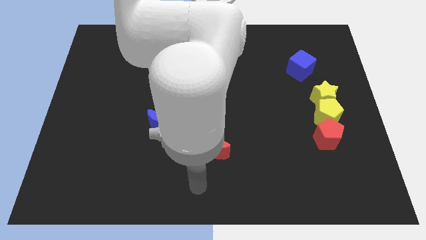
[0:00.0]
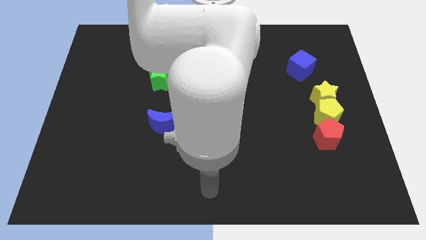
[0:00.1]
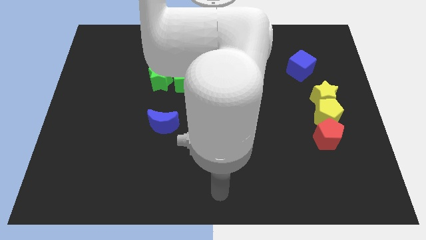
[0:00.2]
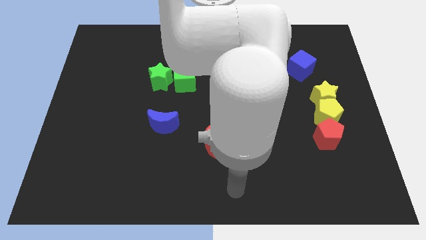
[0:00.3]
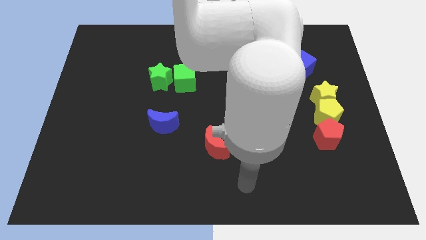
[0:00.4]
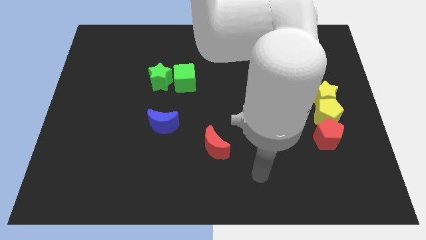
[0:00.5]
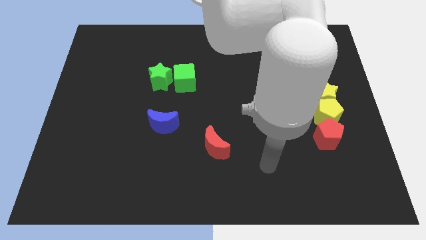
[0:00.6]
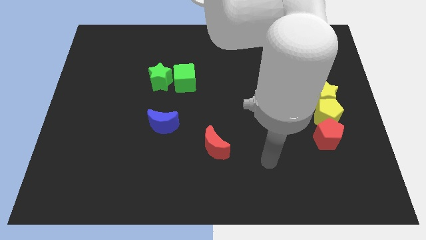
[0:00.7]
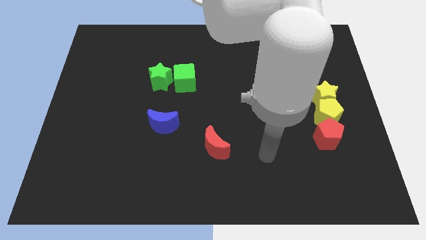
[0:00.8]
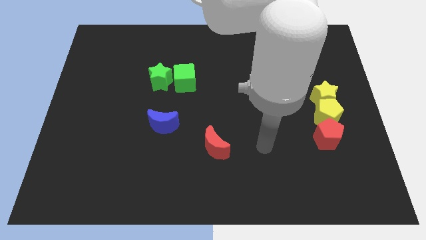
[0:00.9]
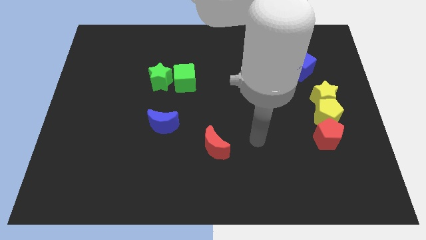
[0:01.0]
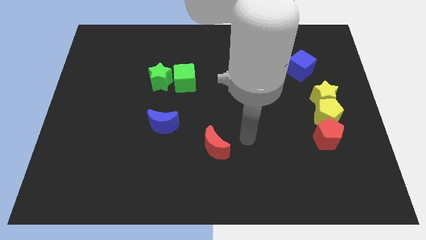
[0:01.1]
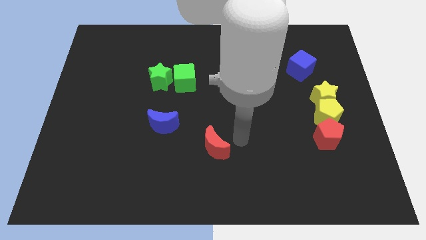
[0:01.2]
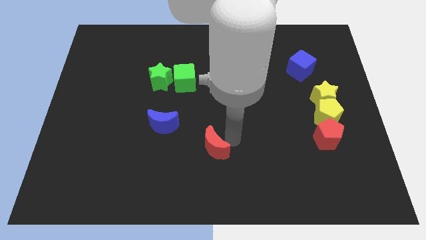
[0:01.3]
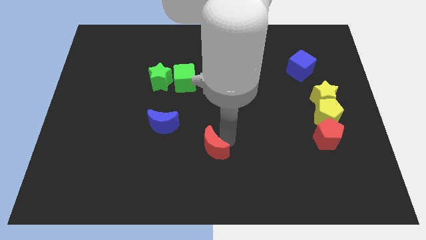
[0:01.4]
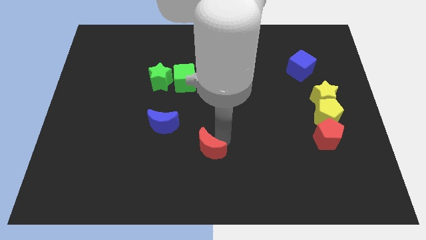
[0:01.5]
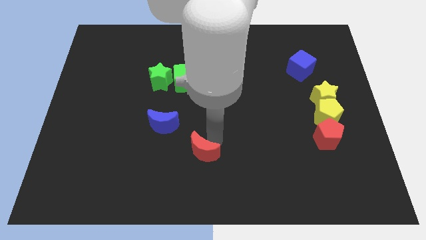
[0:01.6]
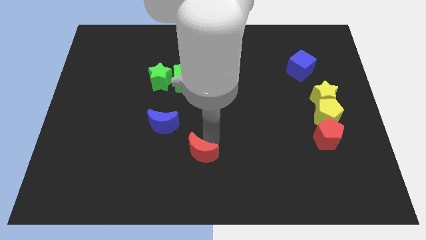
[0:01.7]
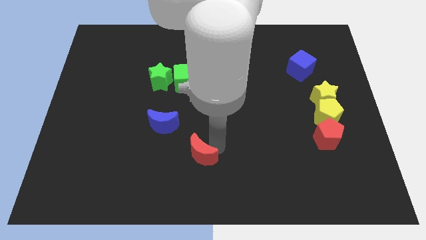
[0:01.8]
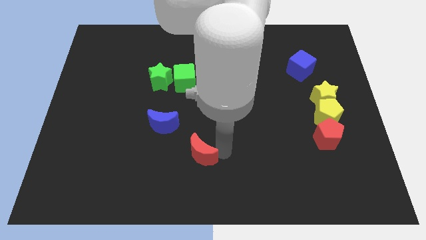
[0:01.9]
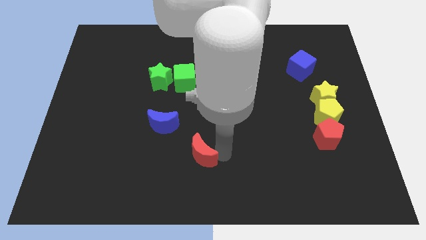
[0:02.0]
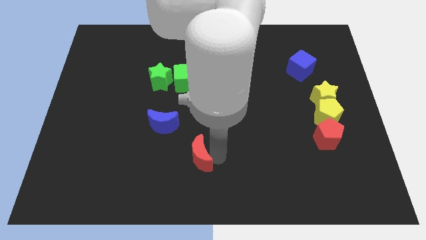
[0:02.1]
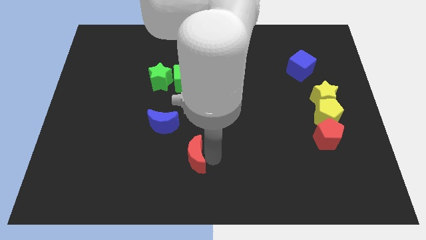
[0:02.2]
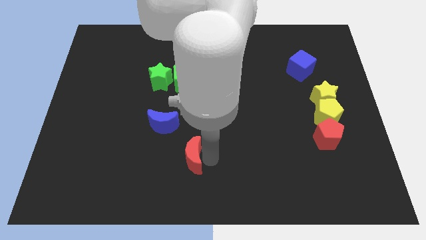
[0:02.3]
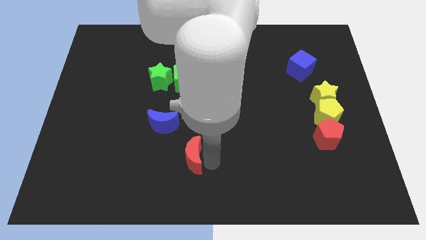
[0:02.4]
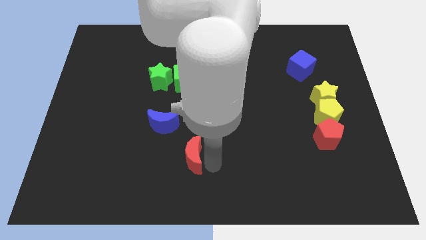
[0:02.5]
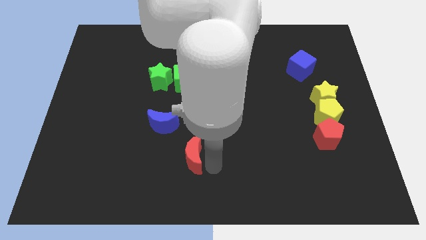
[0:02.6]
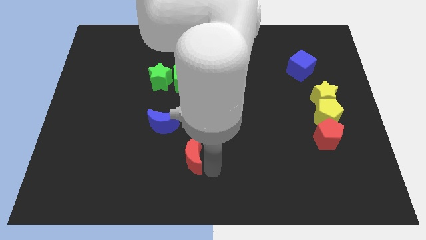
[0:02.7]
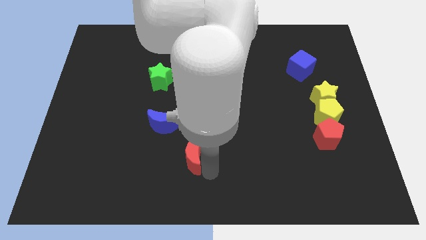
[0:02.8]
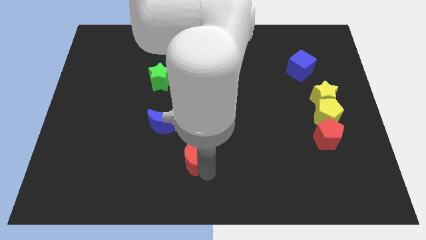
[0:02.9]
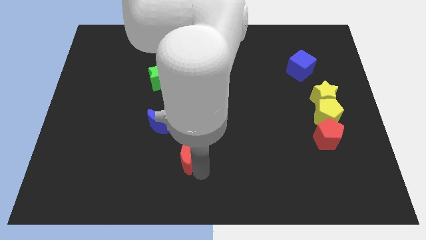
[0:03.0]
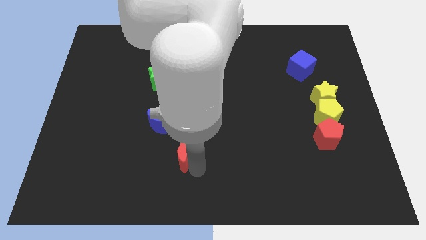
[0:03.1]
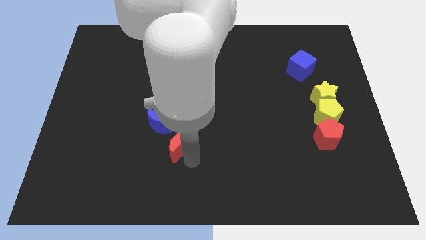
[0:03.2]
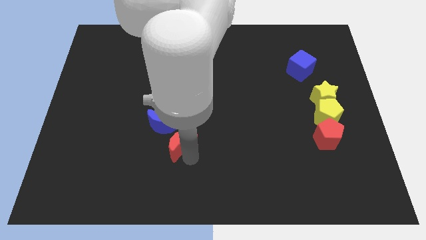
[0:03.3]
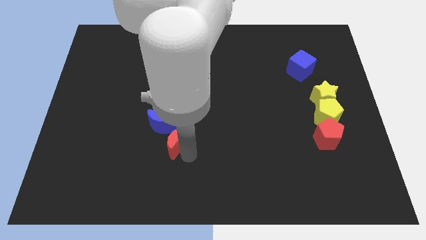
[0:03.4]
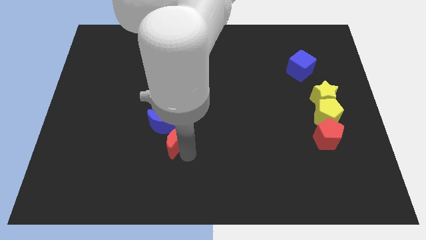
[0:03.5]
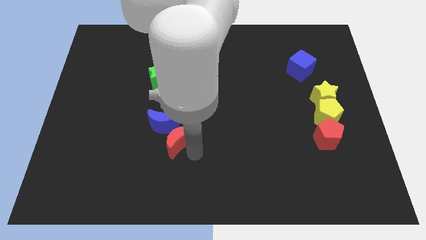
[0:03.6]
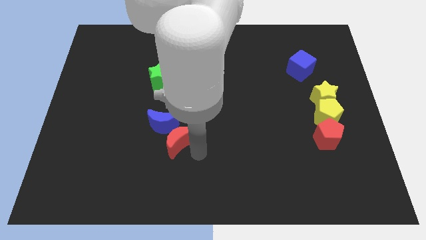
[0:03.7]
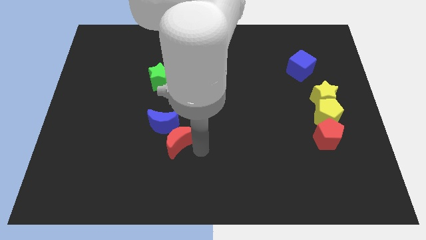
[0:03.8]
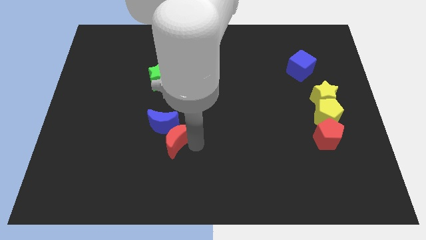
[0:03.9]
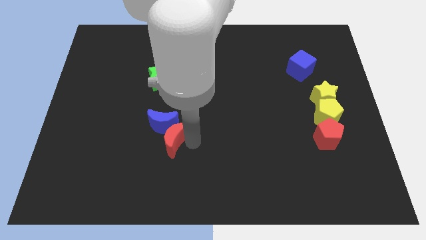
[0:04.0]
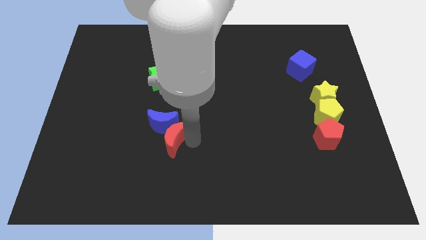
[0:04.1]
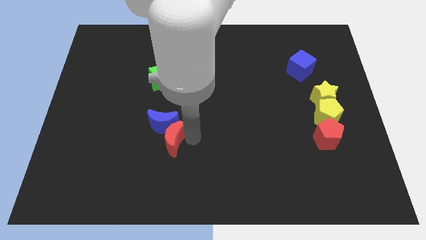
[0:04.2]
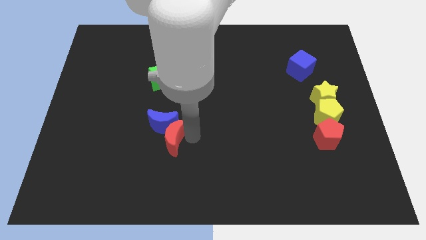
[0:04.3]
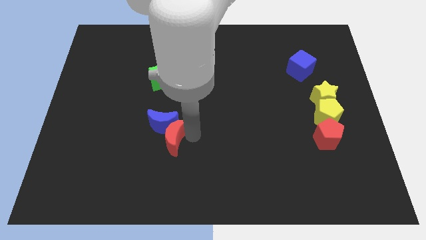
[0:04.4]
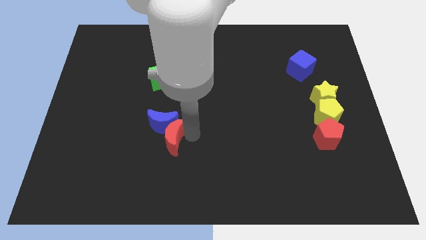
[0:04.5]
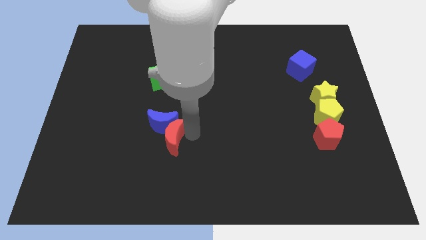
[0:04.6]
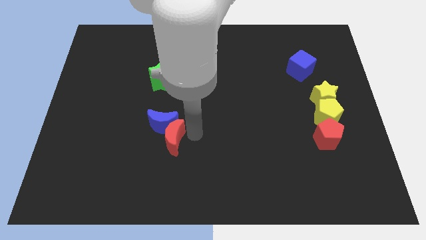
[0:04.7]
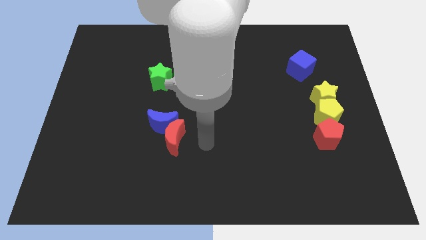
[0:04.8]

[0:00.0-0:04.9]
push the red moon into the blue moon

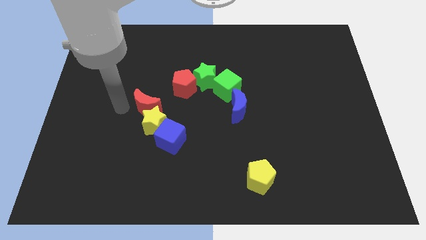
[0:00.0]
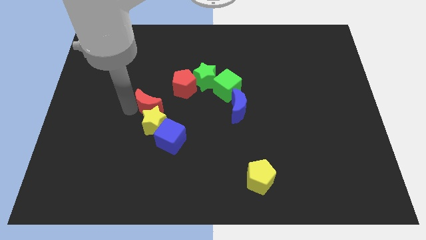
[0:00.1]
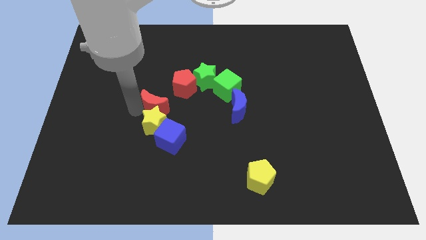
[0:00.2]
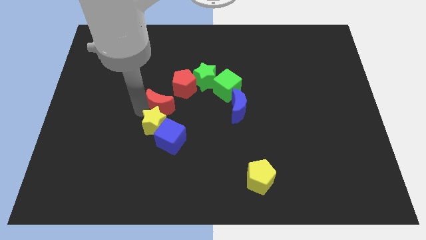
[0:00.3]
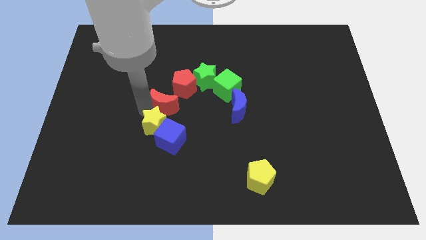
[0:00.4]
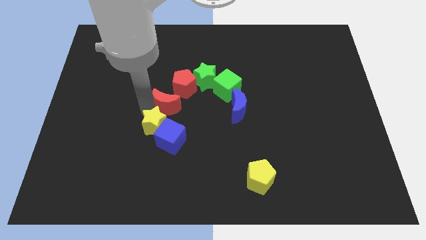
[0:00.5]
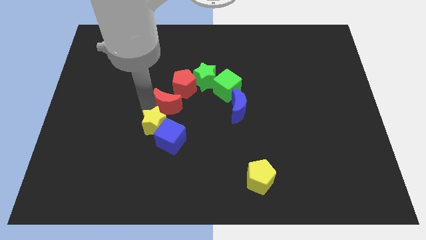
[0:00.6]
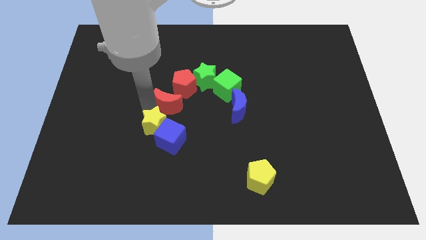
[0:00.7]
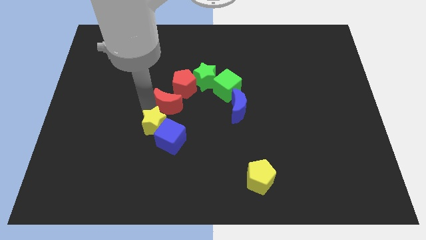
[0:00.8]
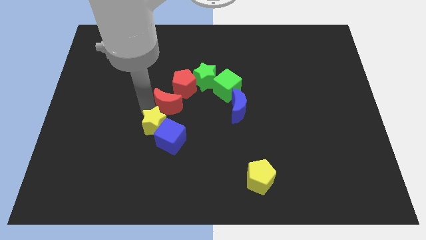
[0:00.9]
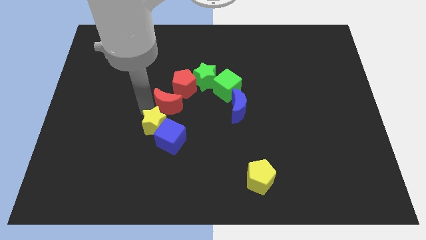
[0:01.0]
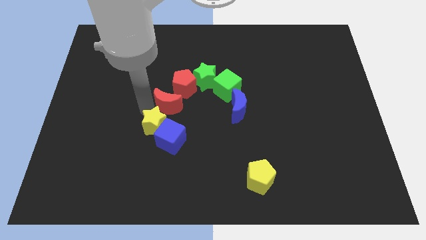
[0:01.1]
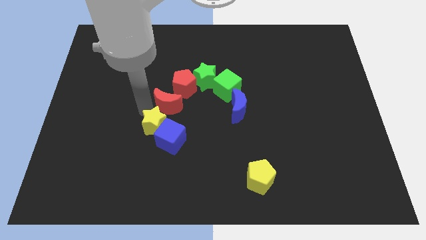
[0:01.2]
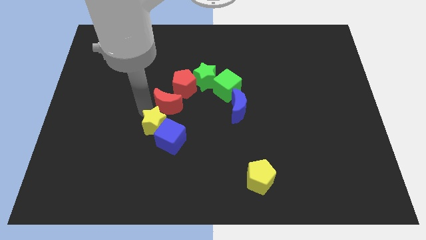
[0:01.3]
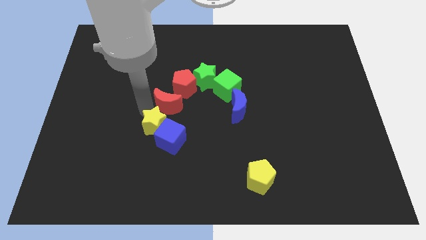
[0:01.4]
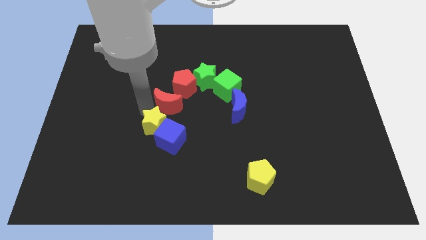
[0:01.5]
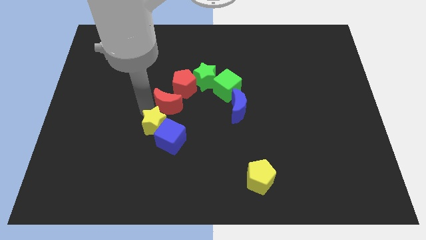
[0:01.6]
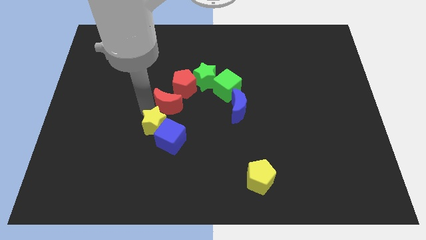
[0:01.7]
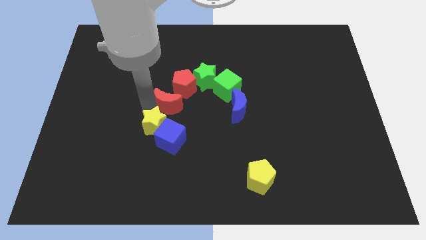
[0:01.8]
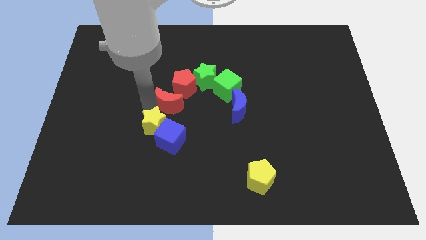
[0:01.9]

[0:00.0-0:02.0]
place the red crescent diagonally in between the red pentagon and yellow star

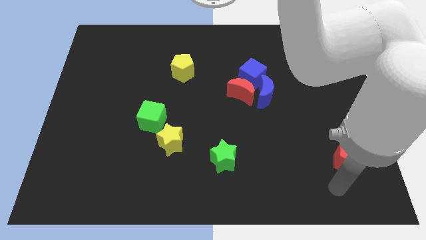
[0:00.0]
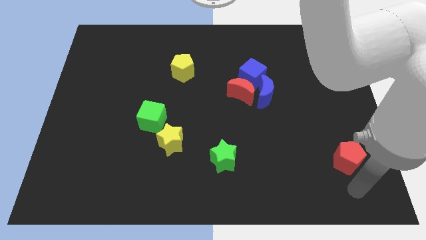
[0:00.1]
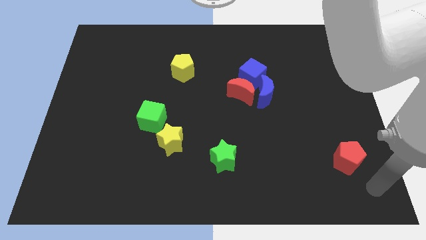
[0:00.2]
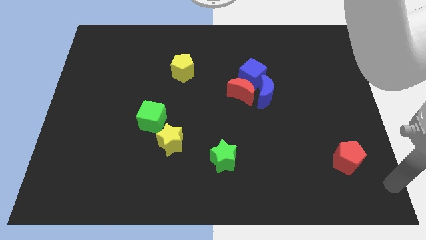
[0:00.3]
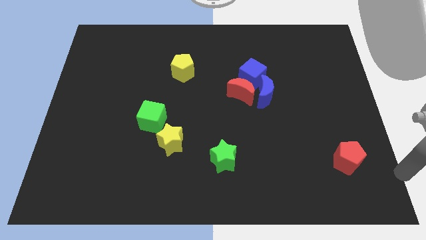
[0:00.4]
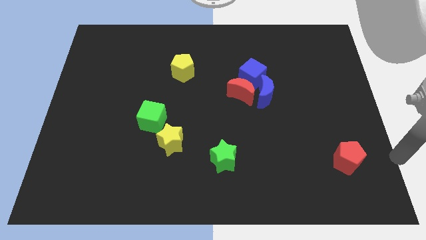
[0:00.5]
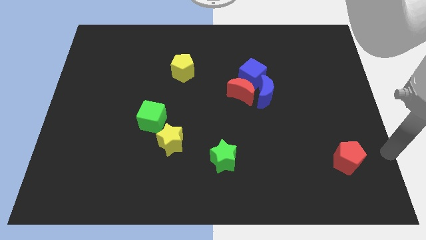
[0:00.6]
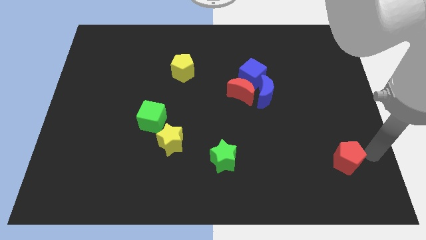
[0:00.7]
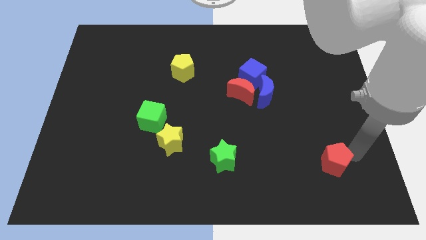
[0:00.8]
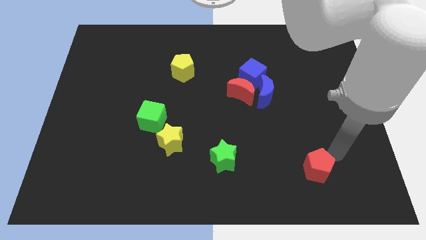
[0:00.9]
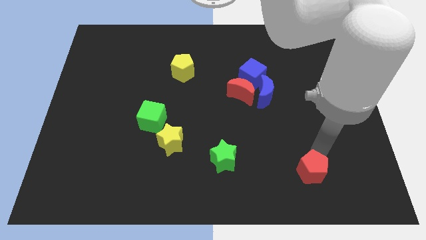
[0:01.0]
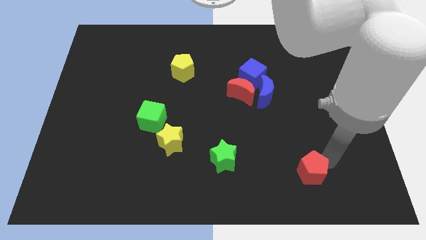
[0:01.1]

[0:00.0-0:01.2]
push the red pentagon to the left of the board

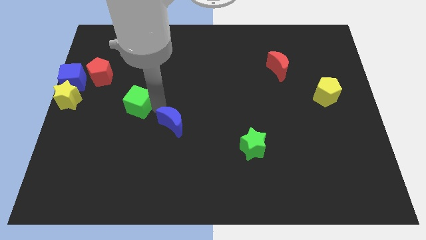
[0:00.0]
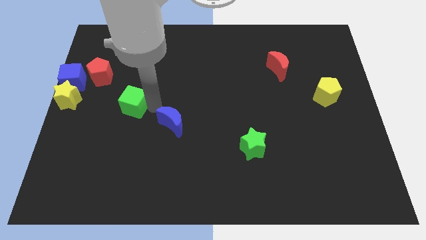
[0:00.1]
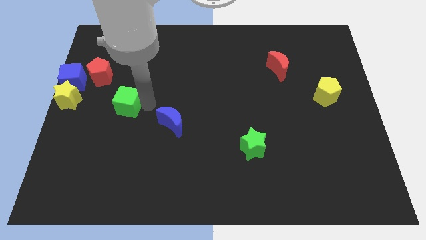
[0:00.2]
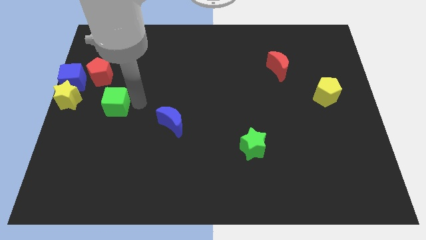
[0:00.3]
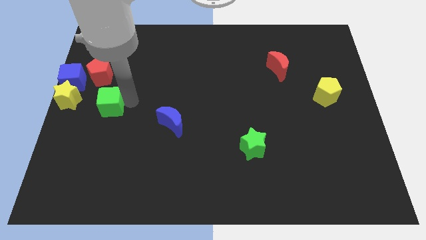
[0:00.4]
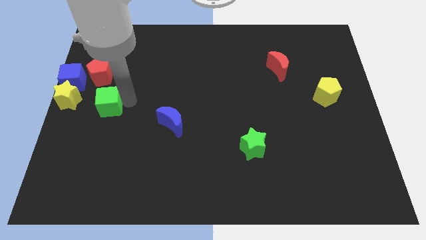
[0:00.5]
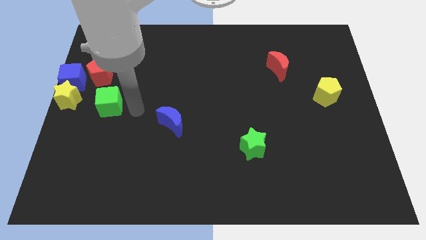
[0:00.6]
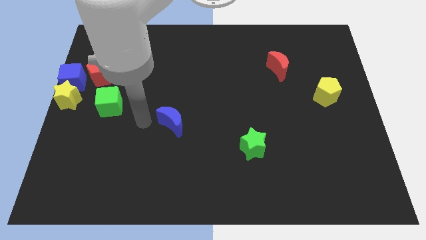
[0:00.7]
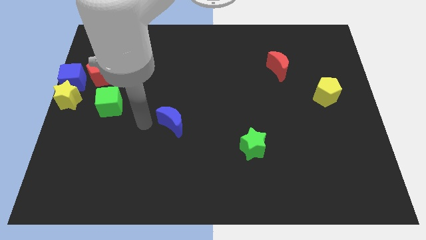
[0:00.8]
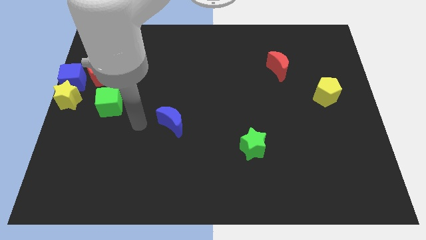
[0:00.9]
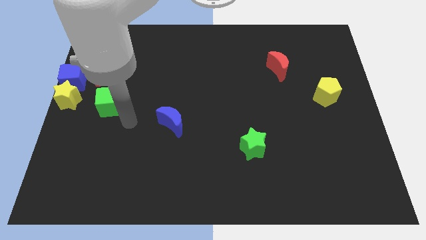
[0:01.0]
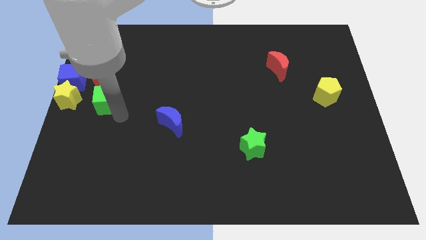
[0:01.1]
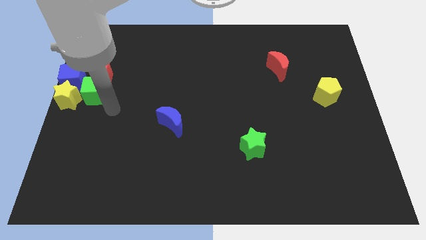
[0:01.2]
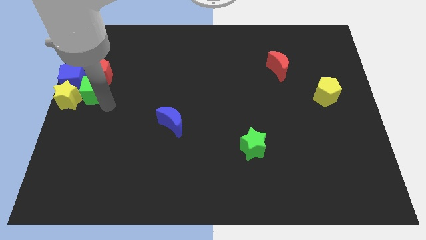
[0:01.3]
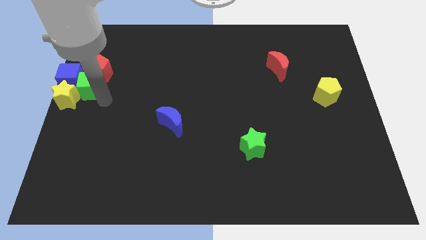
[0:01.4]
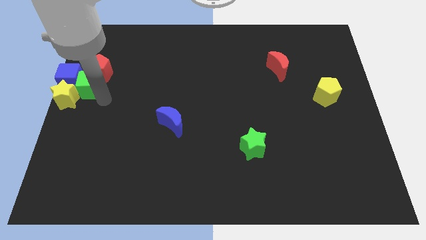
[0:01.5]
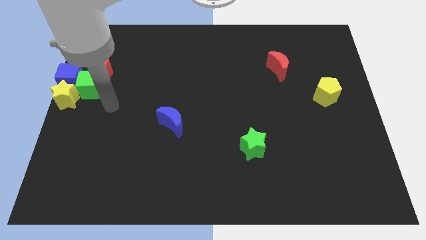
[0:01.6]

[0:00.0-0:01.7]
move the green cube to the right side of the blue cube
